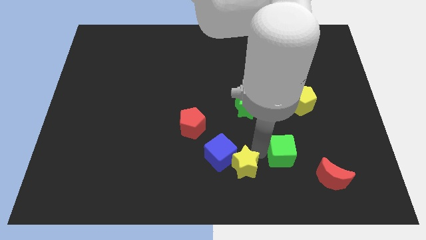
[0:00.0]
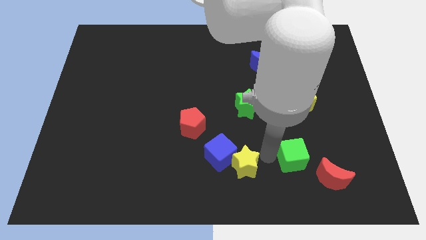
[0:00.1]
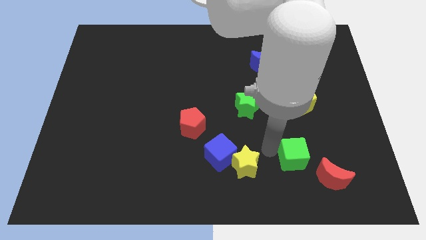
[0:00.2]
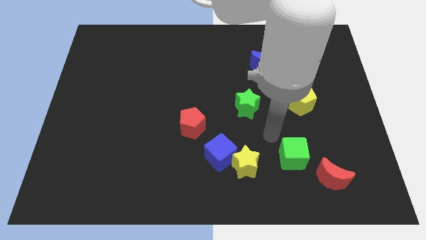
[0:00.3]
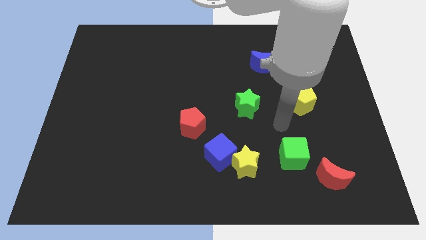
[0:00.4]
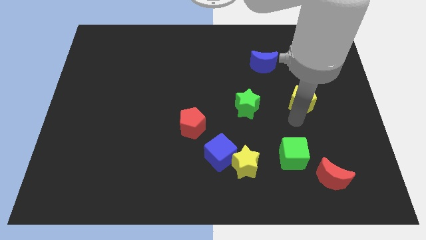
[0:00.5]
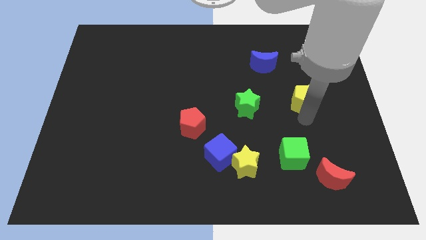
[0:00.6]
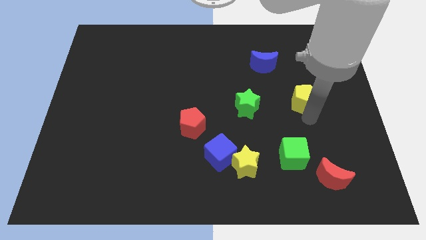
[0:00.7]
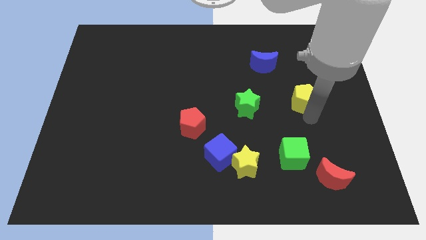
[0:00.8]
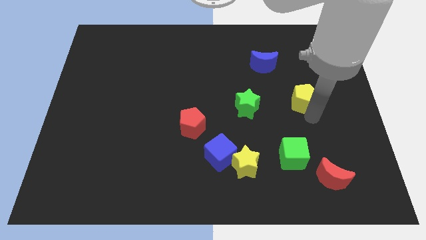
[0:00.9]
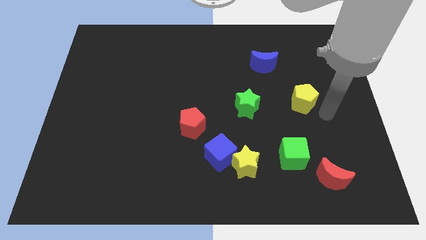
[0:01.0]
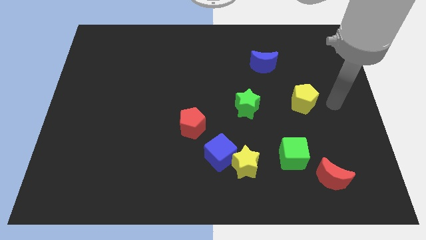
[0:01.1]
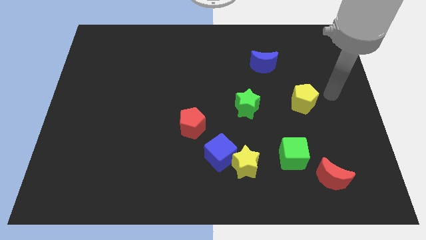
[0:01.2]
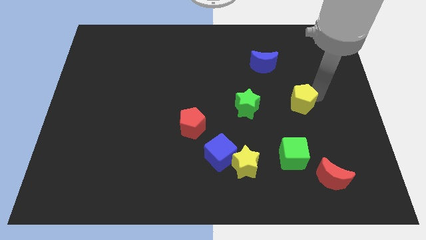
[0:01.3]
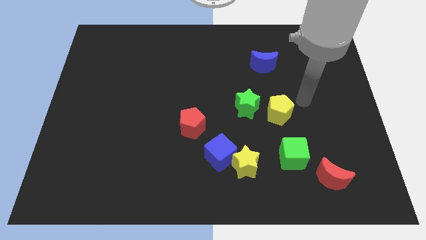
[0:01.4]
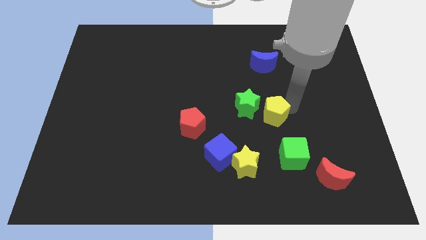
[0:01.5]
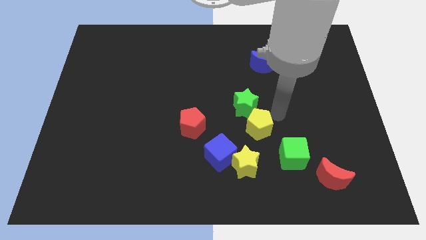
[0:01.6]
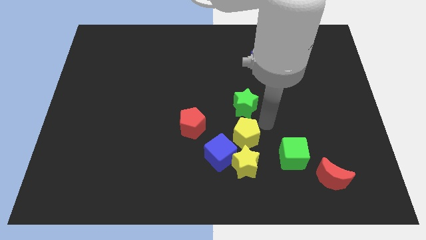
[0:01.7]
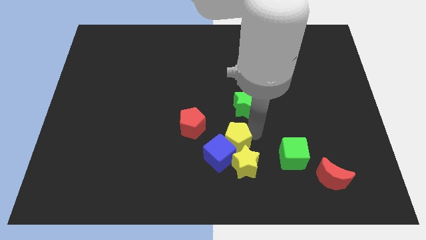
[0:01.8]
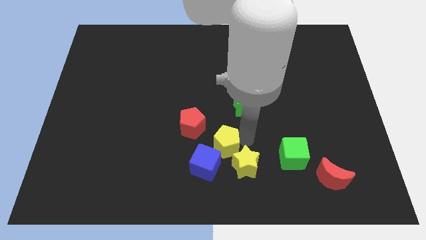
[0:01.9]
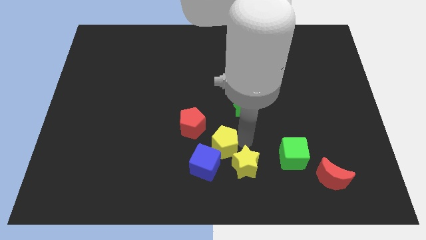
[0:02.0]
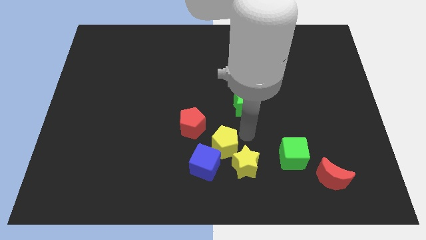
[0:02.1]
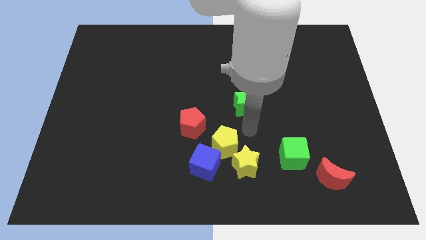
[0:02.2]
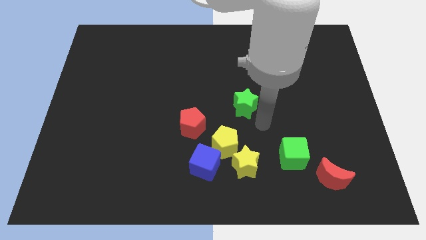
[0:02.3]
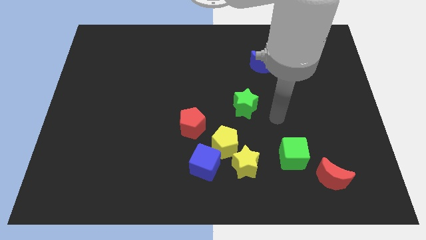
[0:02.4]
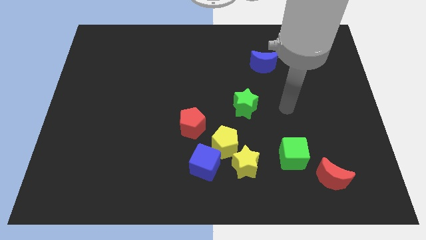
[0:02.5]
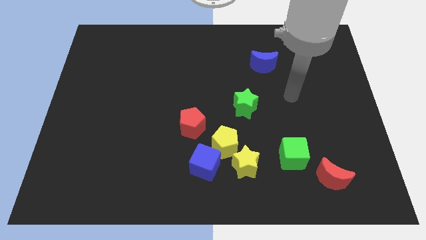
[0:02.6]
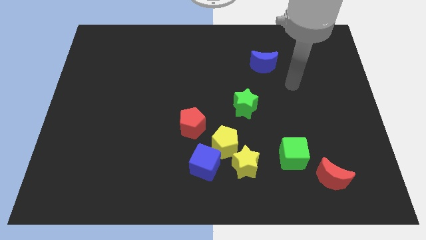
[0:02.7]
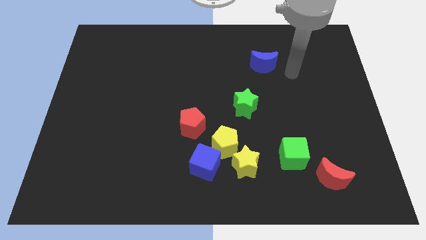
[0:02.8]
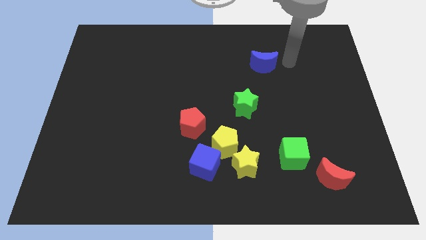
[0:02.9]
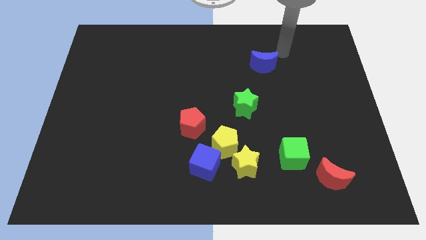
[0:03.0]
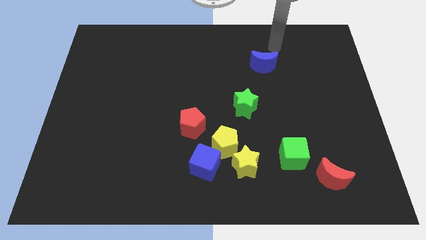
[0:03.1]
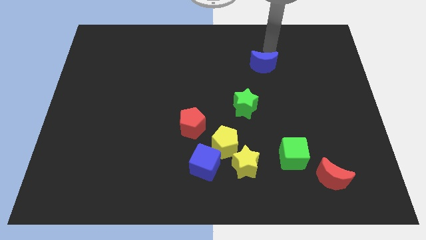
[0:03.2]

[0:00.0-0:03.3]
push the yellow pentagon into the blue cube

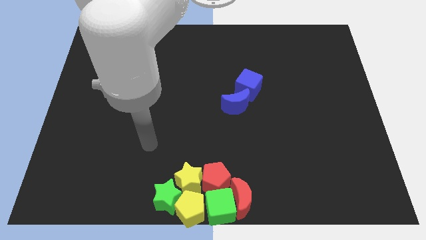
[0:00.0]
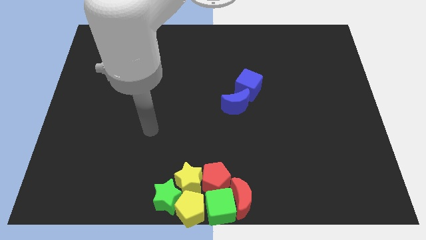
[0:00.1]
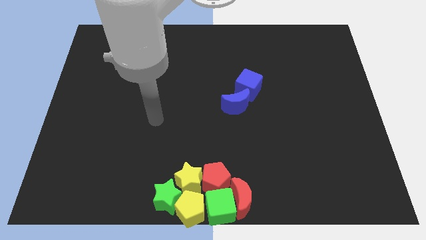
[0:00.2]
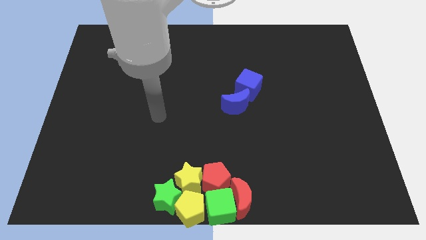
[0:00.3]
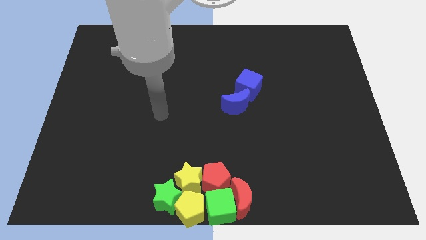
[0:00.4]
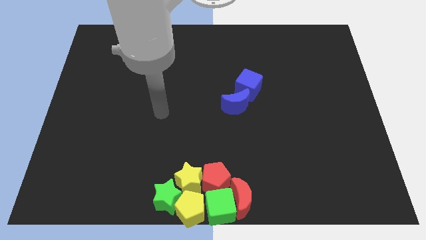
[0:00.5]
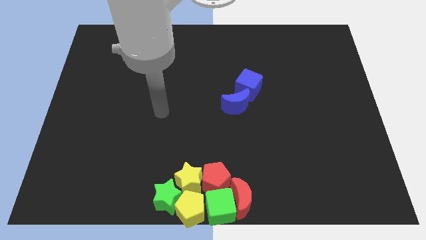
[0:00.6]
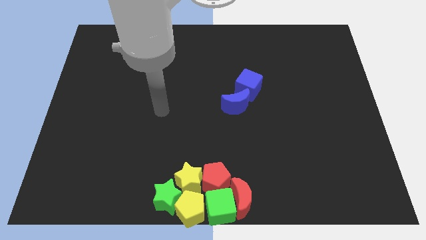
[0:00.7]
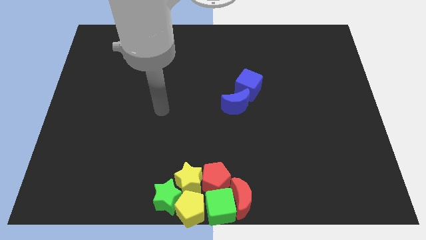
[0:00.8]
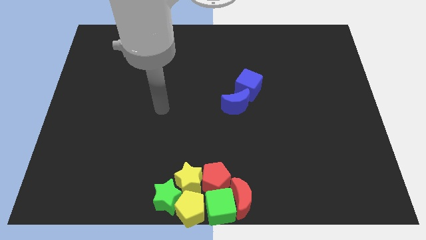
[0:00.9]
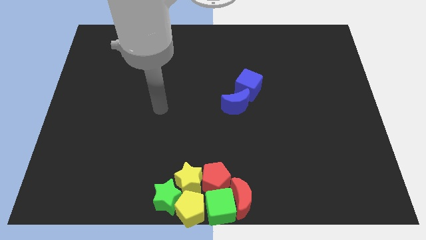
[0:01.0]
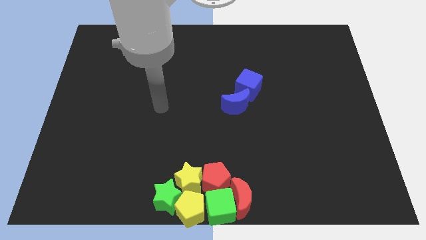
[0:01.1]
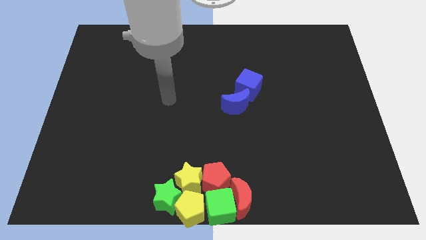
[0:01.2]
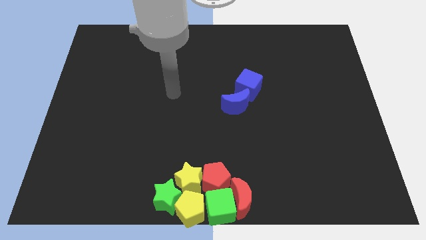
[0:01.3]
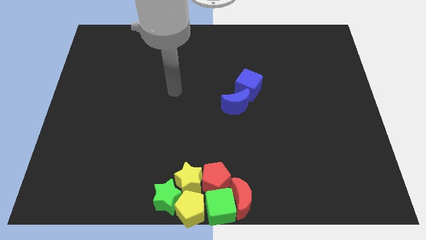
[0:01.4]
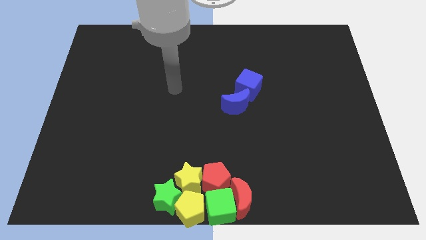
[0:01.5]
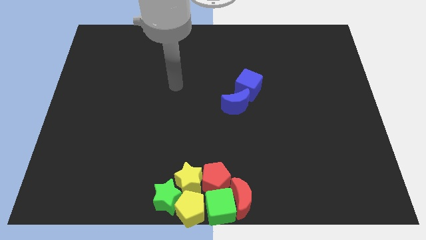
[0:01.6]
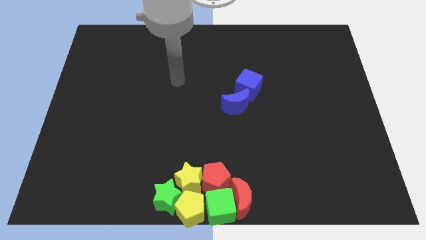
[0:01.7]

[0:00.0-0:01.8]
move arm in the center

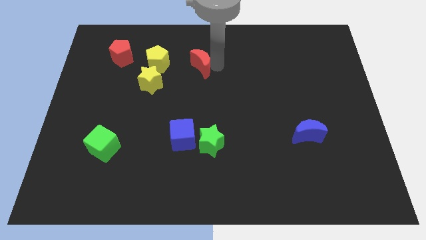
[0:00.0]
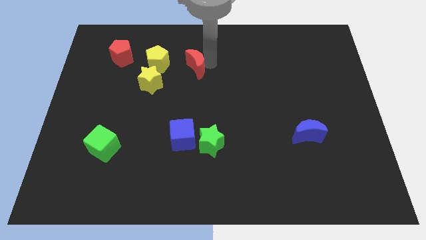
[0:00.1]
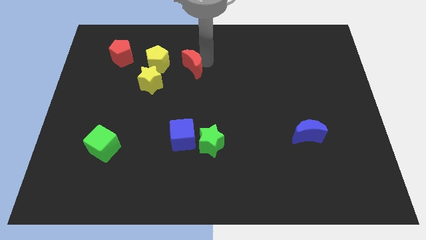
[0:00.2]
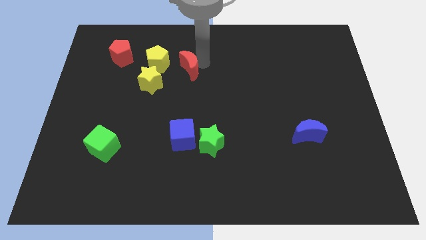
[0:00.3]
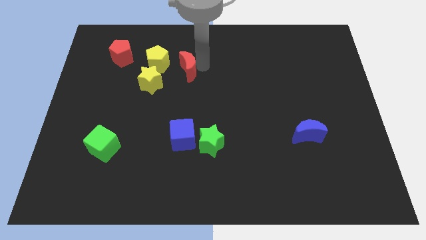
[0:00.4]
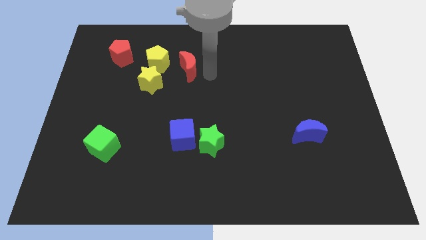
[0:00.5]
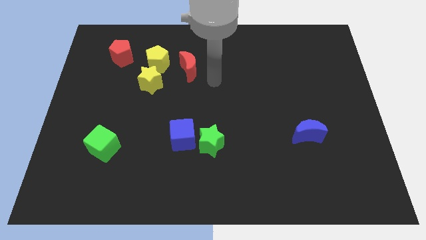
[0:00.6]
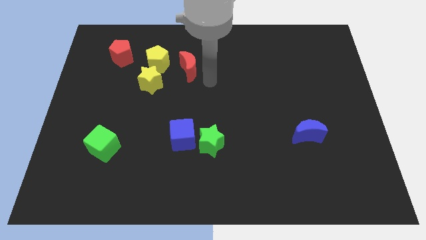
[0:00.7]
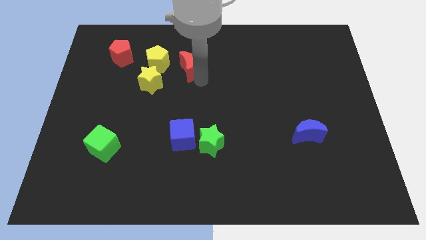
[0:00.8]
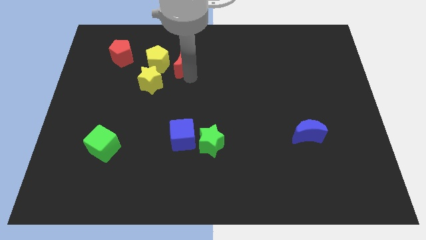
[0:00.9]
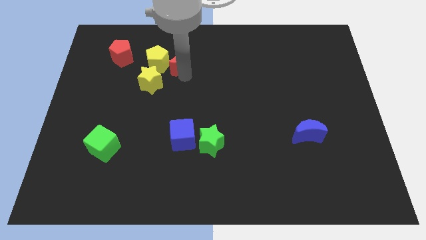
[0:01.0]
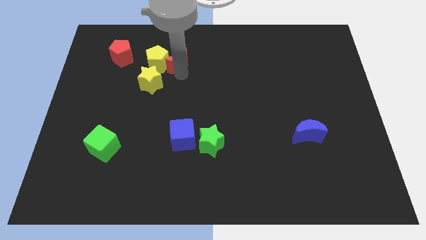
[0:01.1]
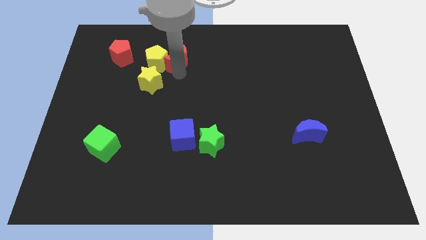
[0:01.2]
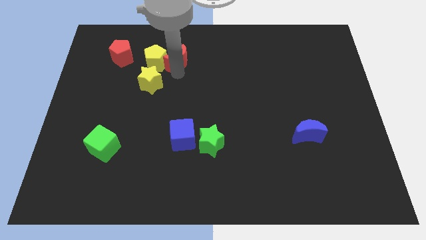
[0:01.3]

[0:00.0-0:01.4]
make the red crescent touch the right side of the yellow pentagon

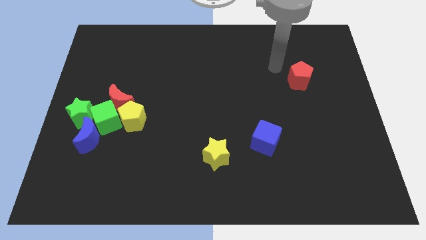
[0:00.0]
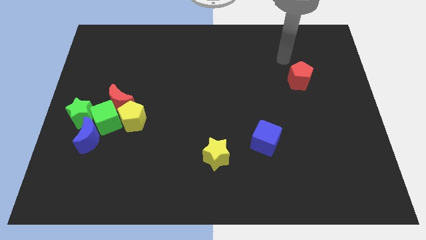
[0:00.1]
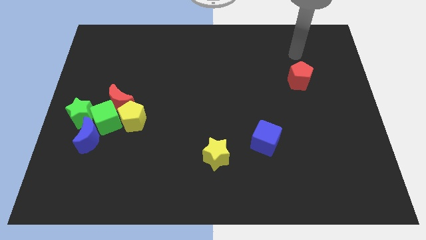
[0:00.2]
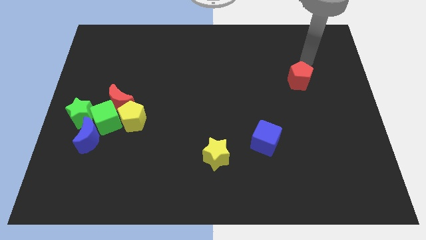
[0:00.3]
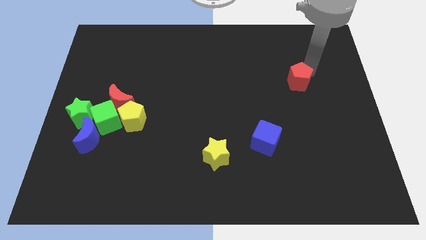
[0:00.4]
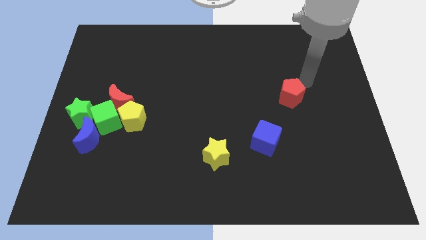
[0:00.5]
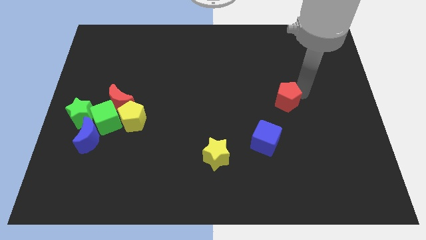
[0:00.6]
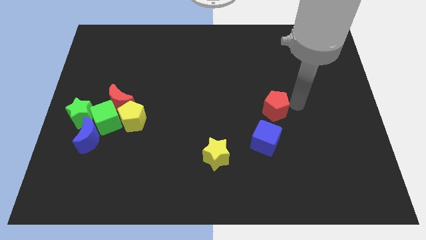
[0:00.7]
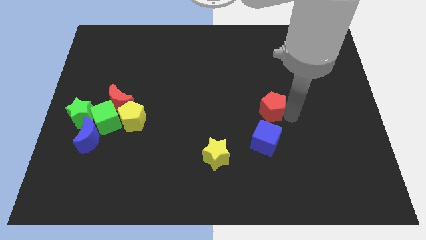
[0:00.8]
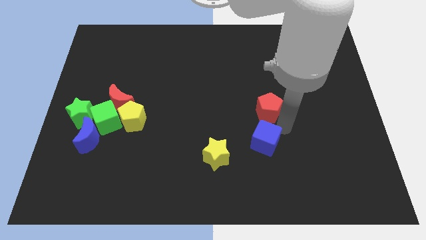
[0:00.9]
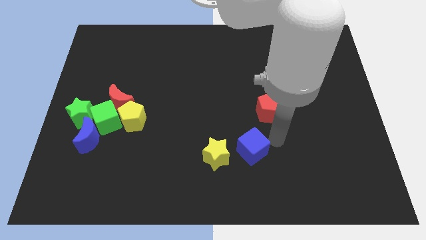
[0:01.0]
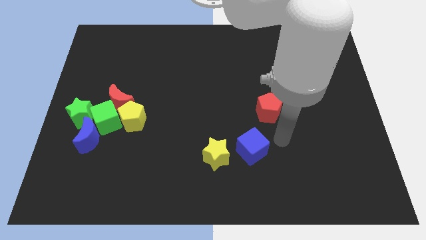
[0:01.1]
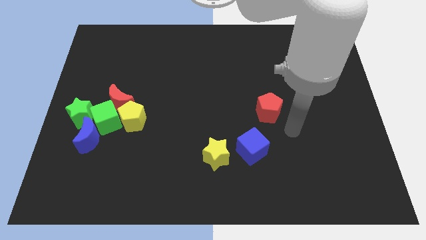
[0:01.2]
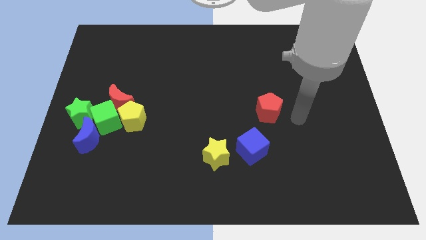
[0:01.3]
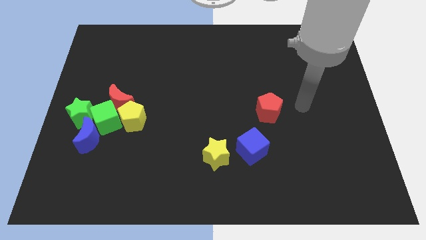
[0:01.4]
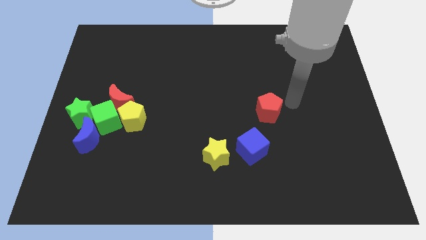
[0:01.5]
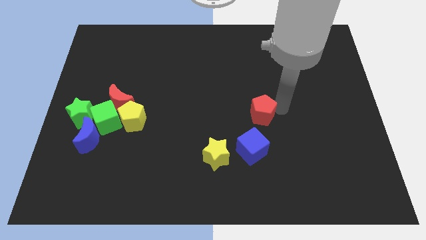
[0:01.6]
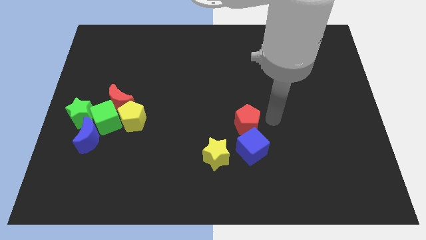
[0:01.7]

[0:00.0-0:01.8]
move the red pentagon close to the blue cube

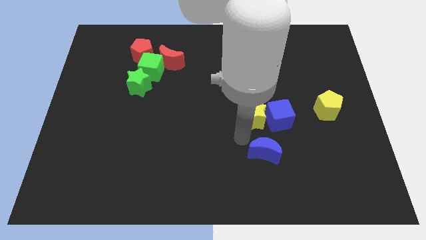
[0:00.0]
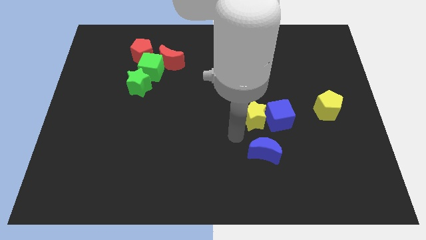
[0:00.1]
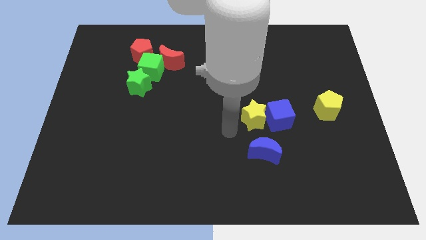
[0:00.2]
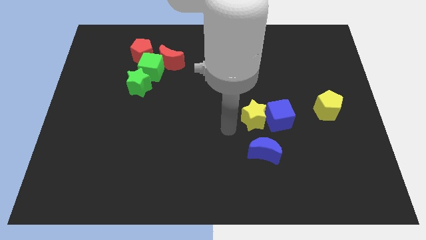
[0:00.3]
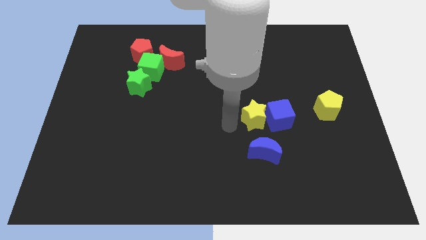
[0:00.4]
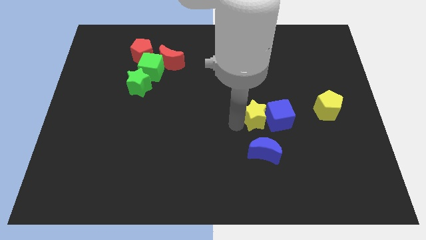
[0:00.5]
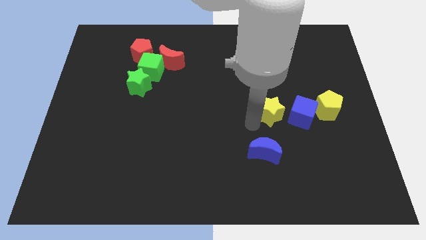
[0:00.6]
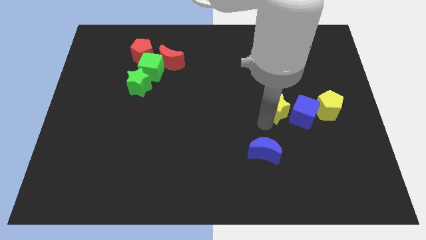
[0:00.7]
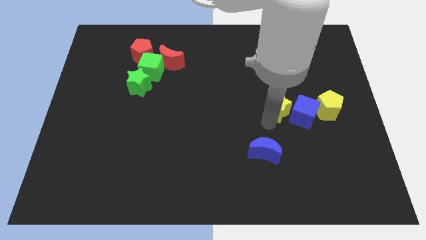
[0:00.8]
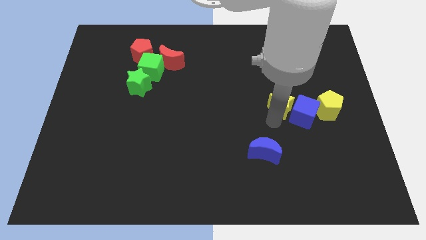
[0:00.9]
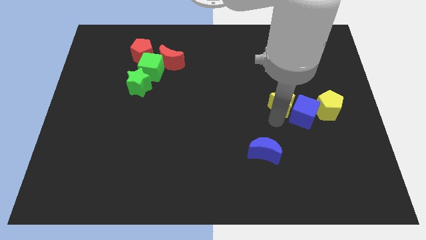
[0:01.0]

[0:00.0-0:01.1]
push the yellow star into the blue cube
